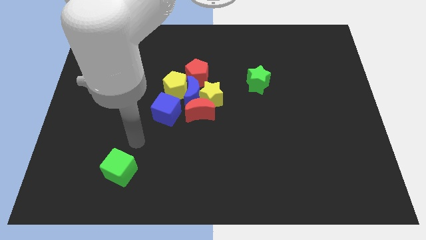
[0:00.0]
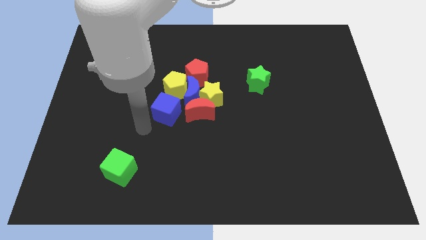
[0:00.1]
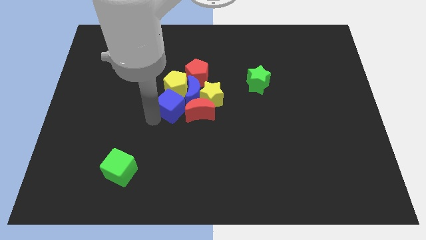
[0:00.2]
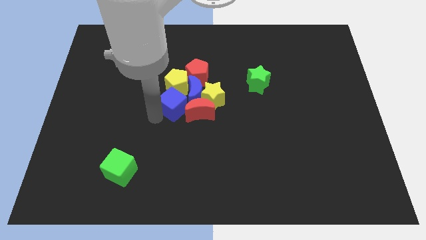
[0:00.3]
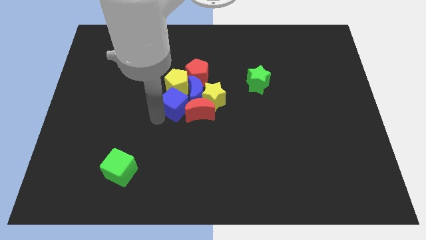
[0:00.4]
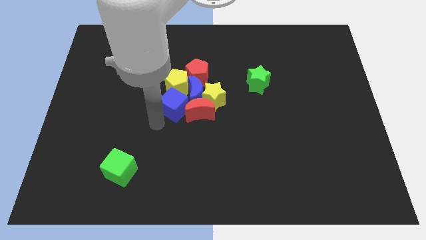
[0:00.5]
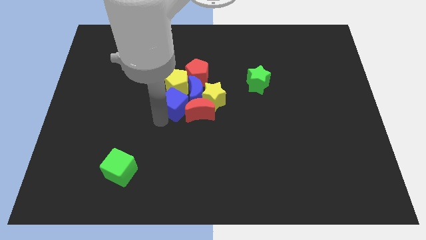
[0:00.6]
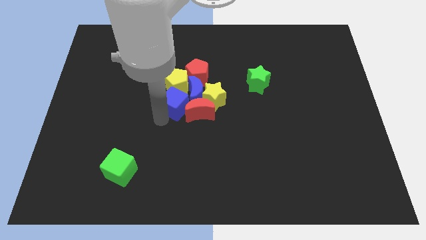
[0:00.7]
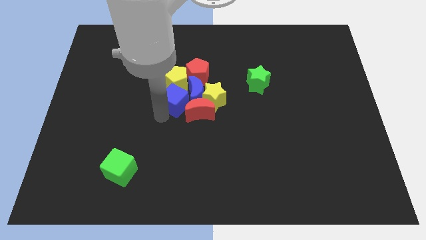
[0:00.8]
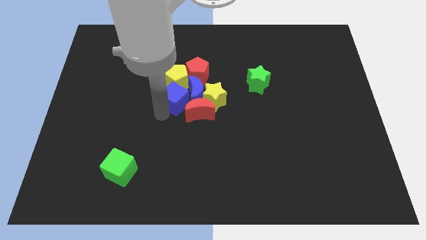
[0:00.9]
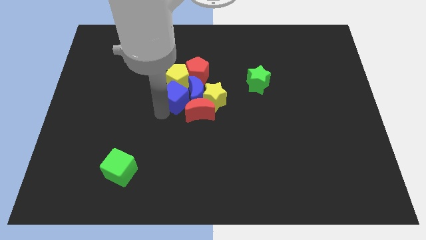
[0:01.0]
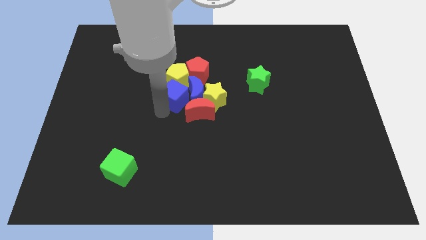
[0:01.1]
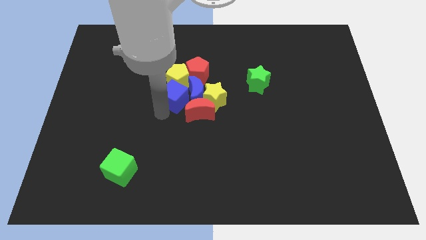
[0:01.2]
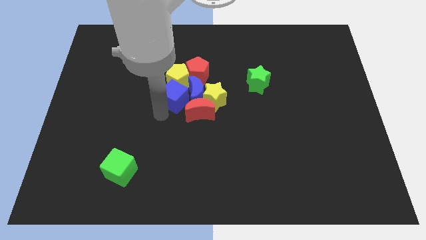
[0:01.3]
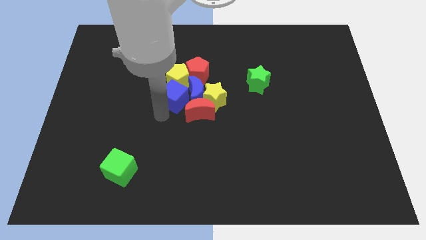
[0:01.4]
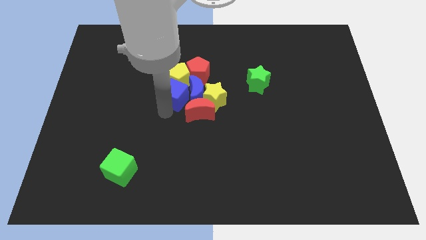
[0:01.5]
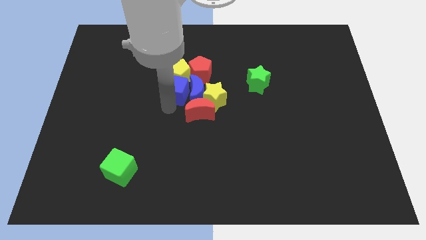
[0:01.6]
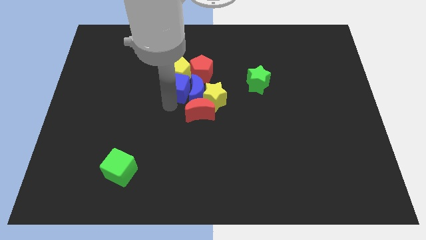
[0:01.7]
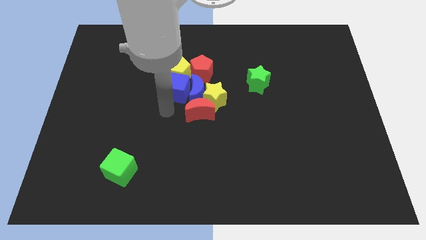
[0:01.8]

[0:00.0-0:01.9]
push the blue cube into the yellow pentagon

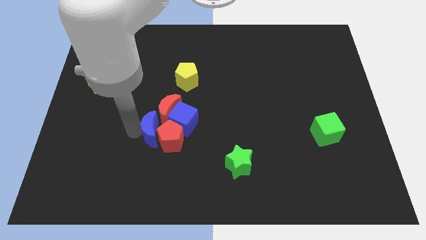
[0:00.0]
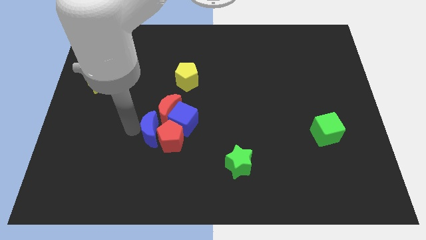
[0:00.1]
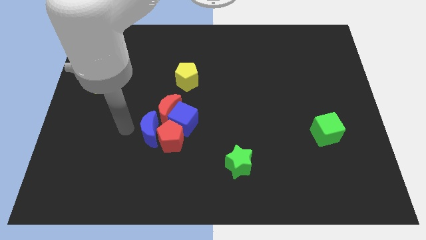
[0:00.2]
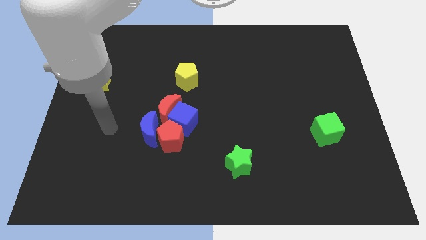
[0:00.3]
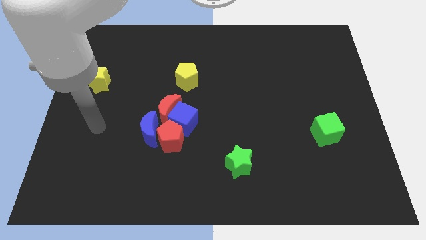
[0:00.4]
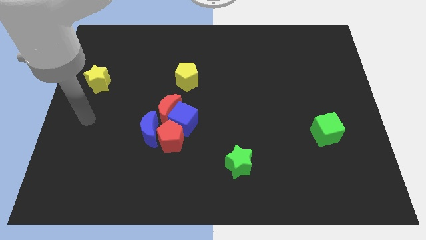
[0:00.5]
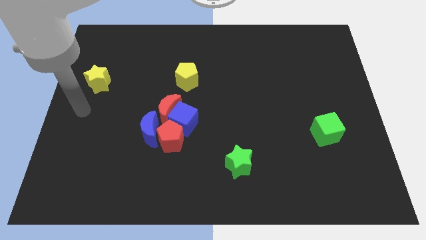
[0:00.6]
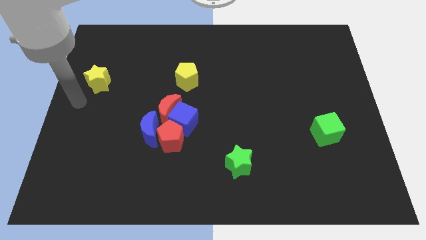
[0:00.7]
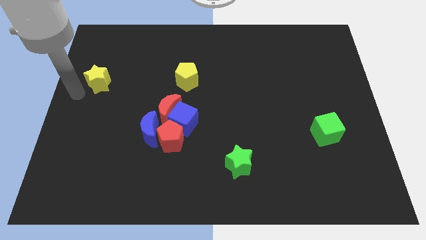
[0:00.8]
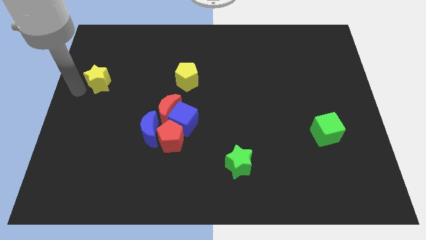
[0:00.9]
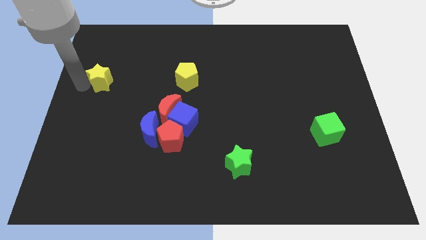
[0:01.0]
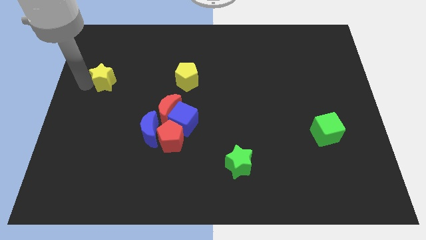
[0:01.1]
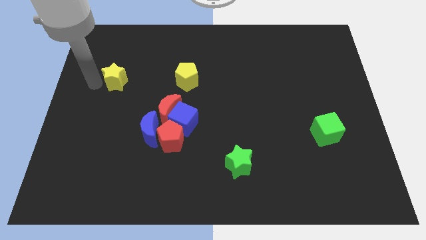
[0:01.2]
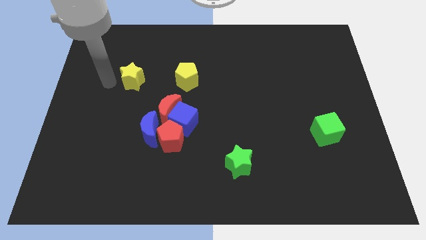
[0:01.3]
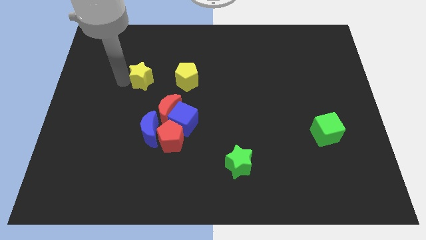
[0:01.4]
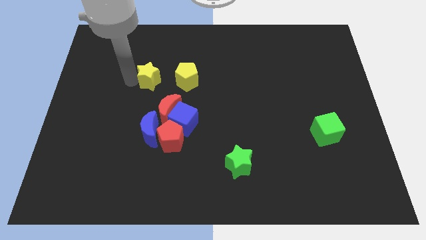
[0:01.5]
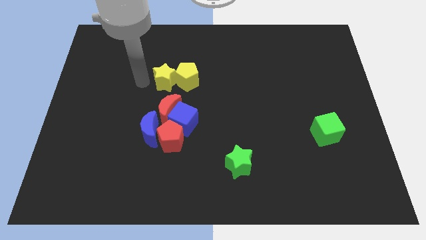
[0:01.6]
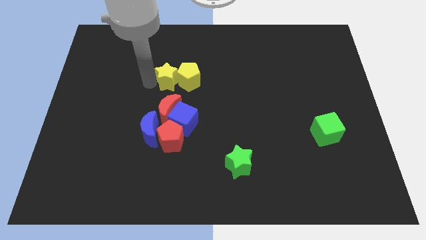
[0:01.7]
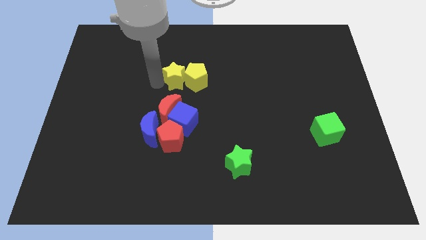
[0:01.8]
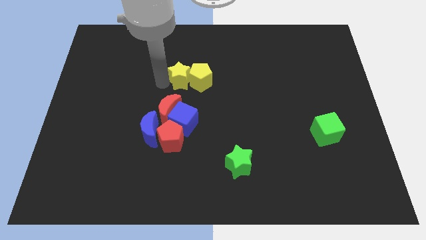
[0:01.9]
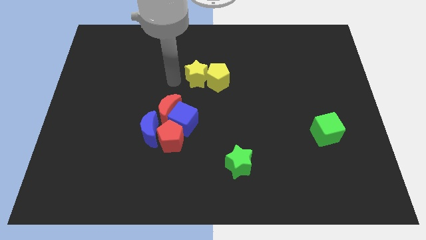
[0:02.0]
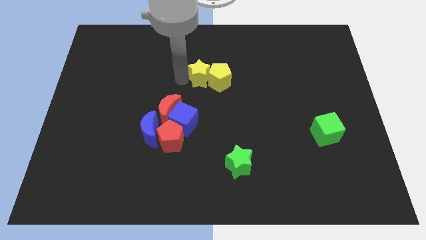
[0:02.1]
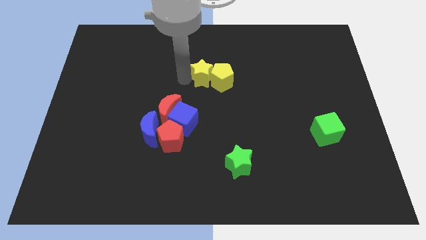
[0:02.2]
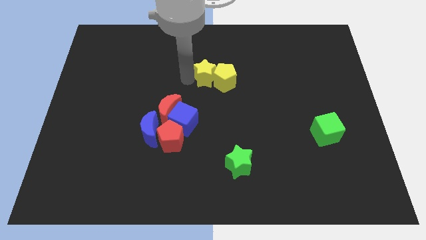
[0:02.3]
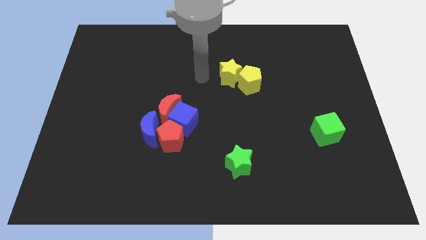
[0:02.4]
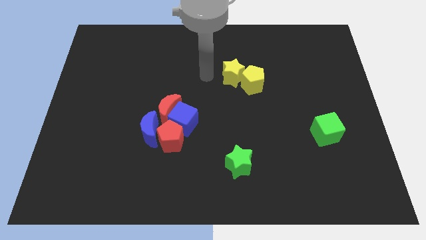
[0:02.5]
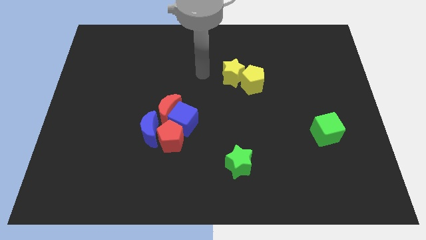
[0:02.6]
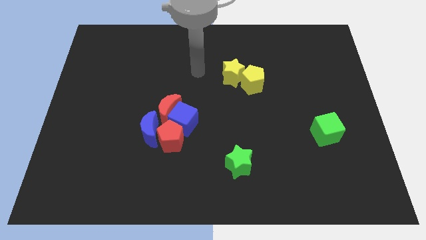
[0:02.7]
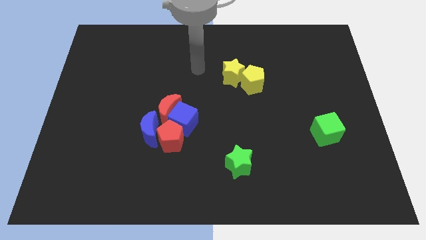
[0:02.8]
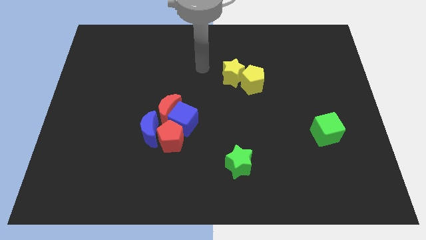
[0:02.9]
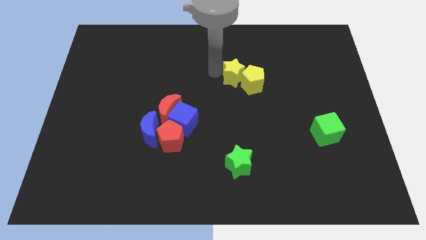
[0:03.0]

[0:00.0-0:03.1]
move the yellow blocks towards the right side

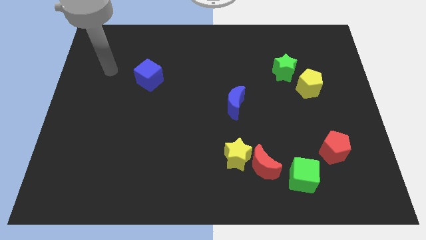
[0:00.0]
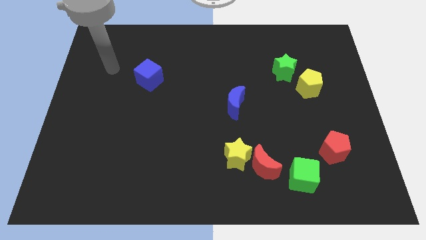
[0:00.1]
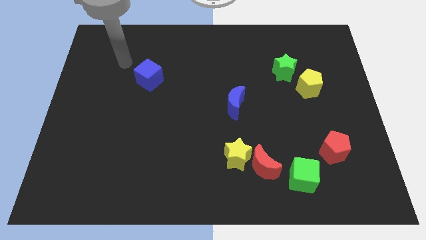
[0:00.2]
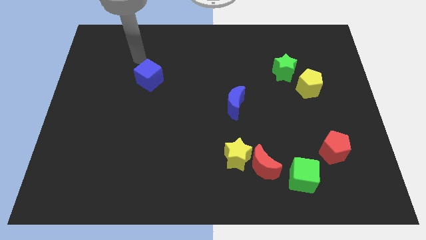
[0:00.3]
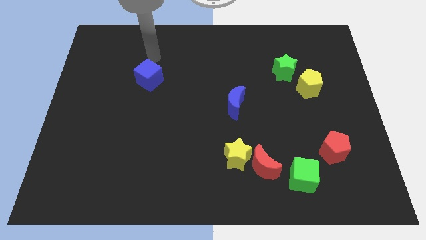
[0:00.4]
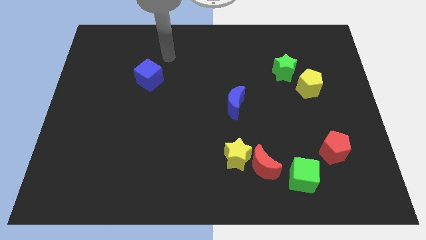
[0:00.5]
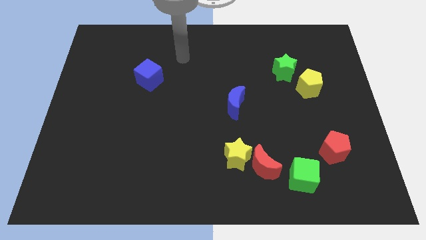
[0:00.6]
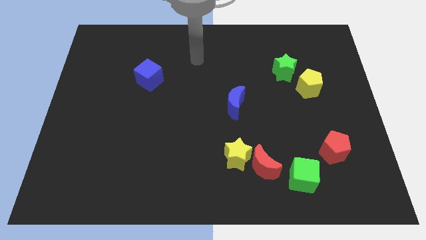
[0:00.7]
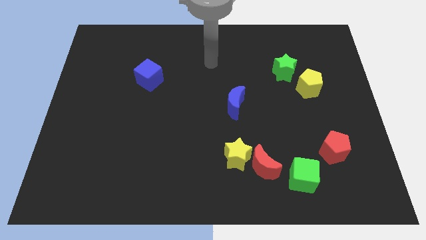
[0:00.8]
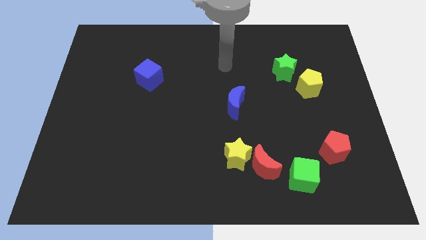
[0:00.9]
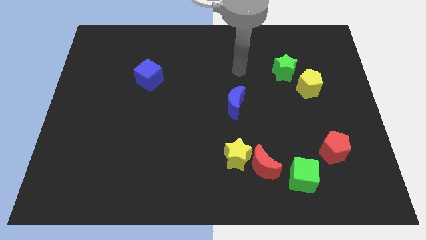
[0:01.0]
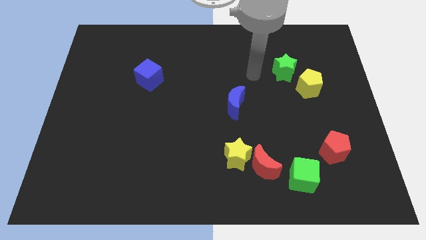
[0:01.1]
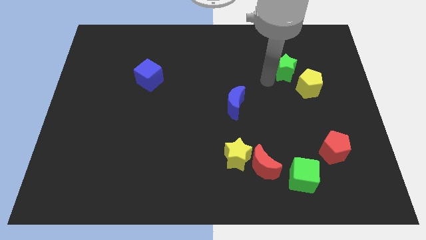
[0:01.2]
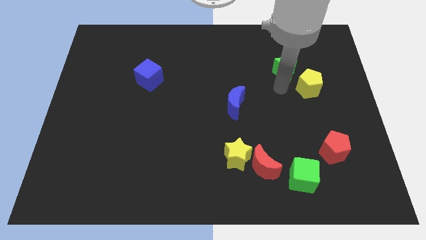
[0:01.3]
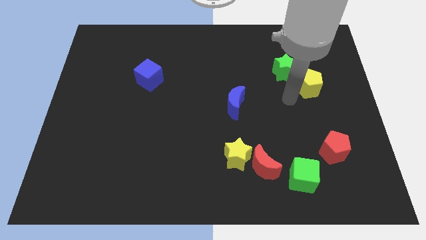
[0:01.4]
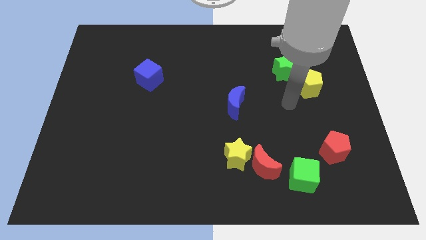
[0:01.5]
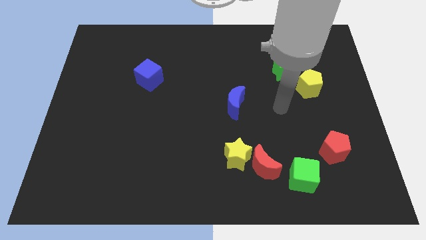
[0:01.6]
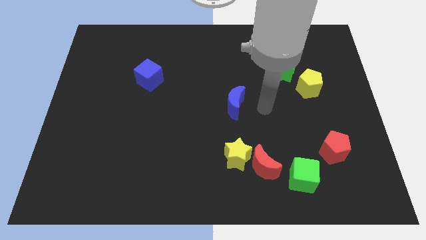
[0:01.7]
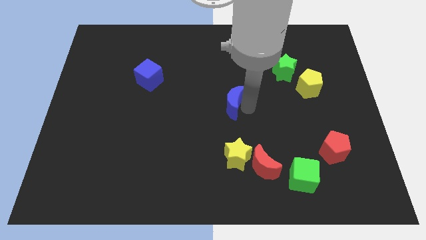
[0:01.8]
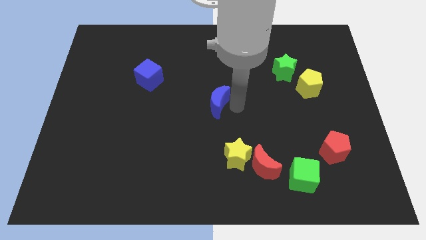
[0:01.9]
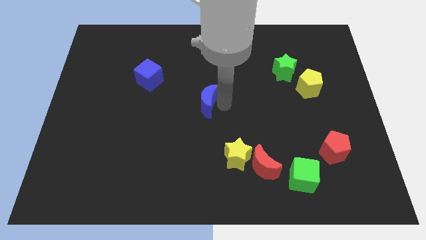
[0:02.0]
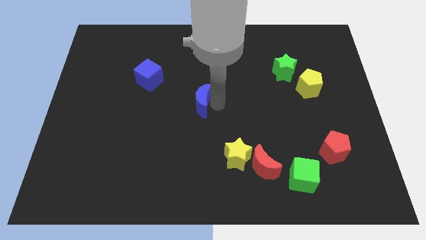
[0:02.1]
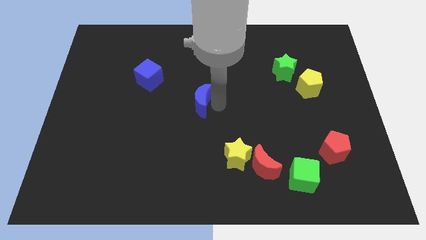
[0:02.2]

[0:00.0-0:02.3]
slightly move the blue moon on left to the board

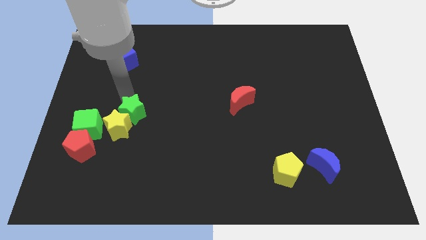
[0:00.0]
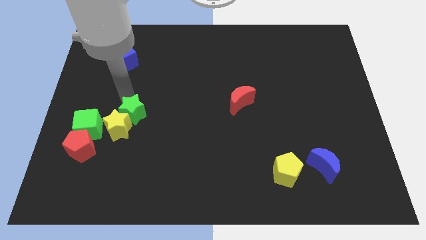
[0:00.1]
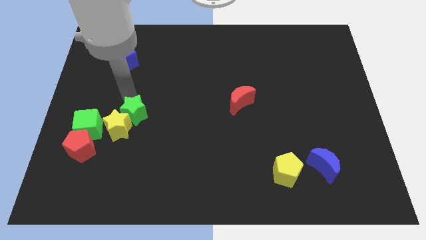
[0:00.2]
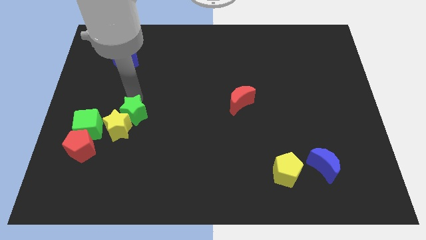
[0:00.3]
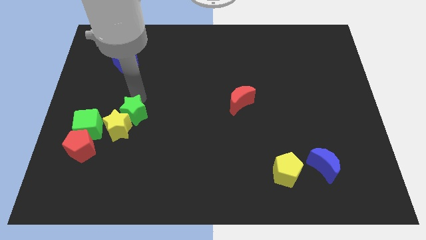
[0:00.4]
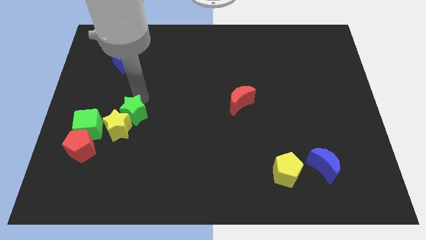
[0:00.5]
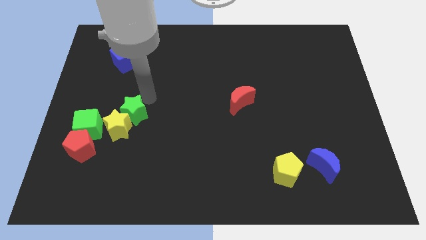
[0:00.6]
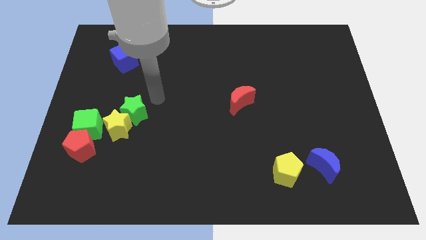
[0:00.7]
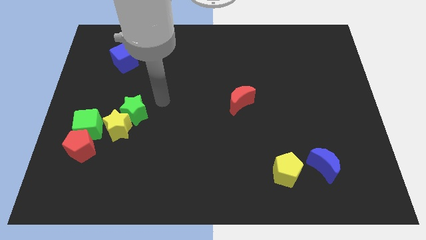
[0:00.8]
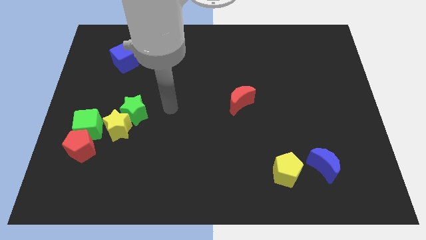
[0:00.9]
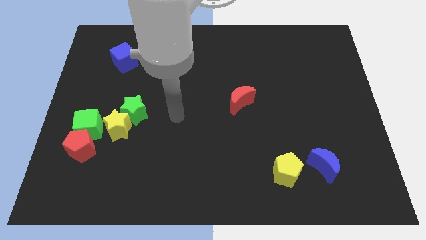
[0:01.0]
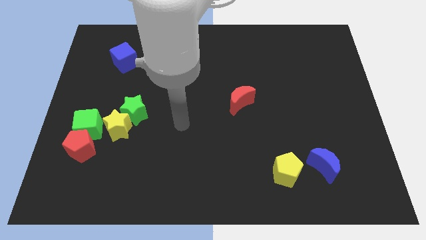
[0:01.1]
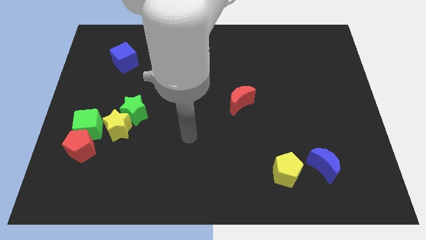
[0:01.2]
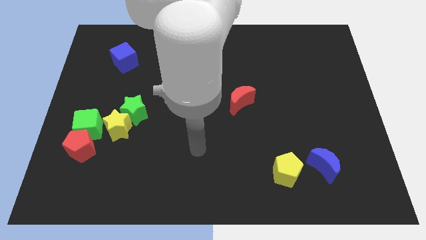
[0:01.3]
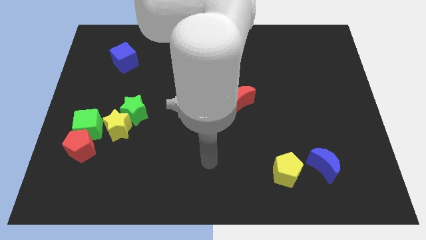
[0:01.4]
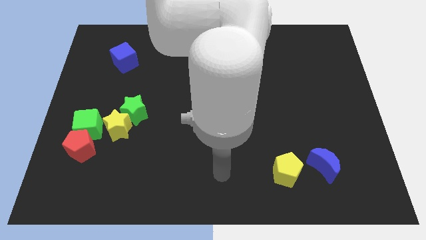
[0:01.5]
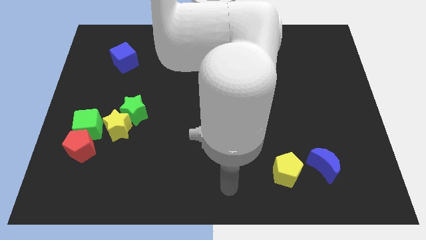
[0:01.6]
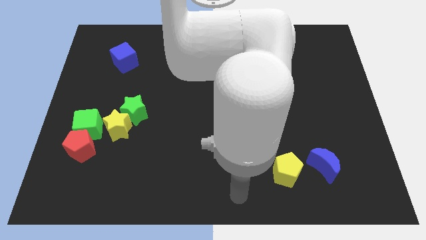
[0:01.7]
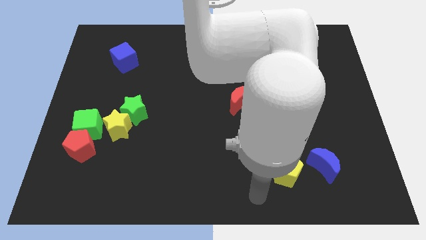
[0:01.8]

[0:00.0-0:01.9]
move the arm towards the yellow pentagon
